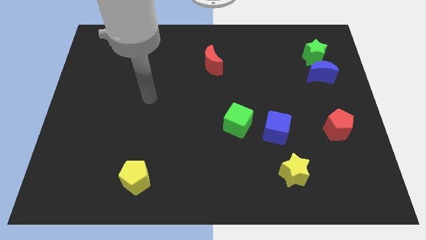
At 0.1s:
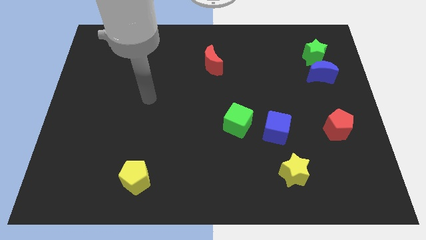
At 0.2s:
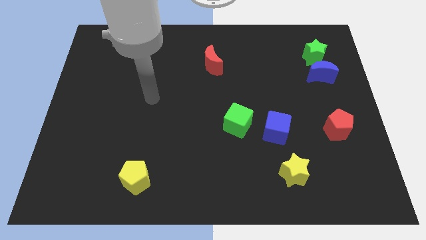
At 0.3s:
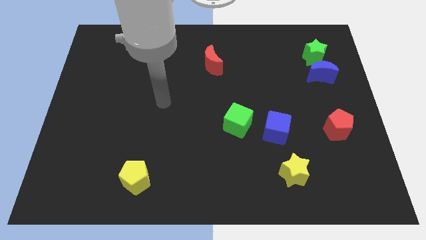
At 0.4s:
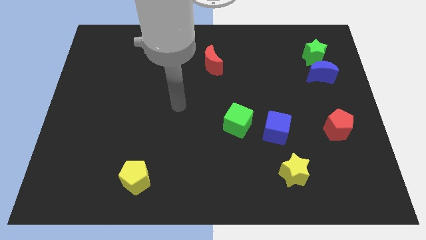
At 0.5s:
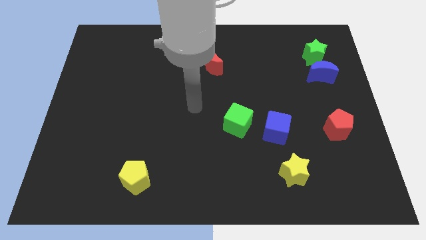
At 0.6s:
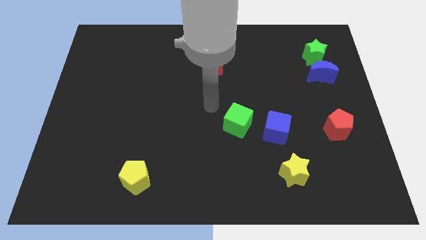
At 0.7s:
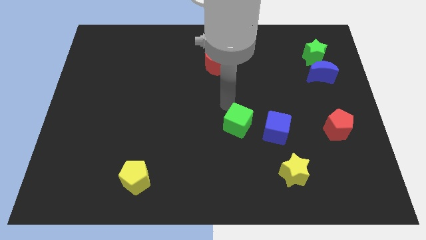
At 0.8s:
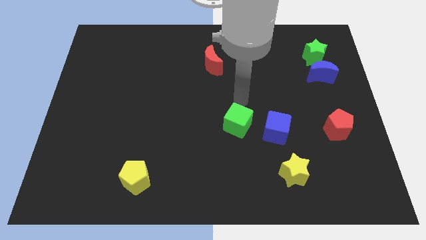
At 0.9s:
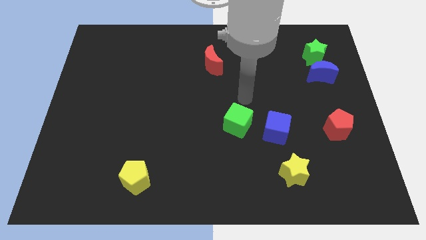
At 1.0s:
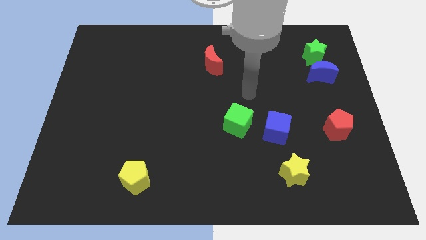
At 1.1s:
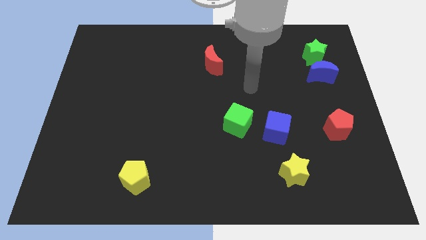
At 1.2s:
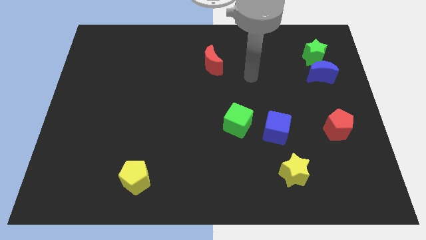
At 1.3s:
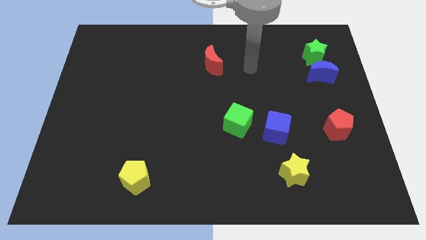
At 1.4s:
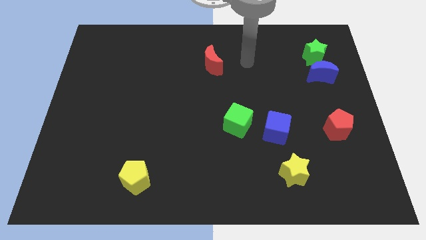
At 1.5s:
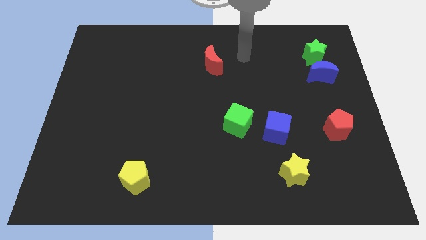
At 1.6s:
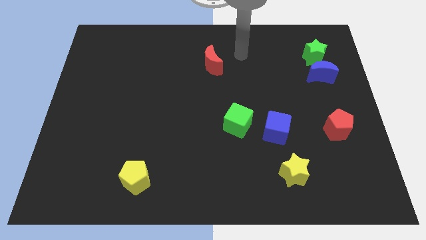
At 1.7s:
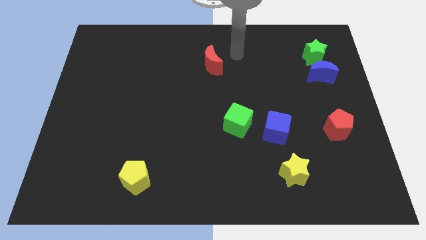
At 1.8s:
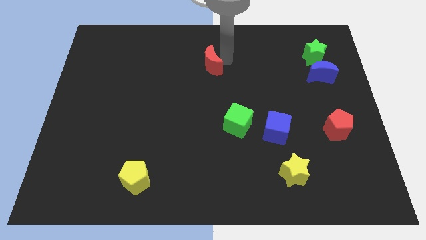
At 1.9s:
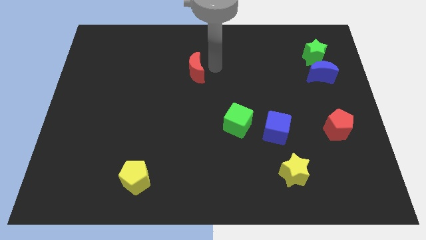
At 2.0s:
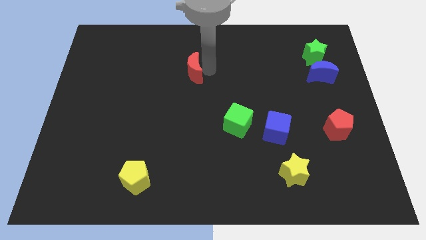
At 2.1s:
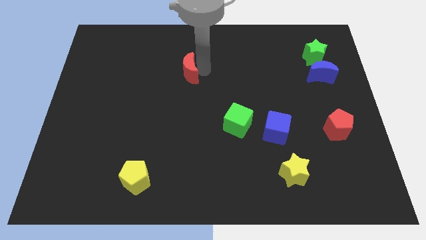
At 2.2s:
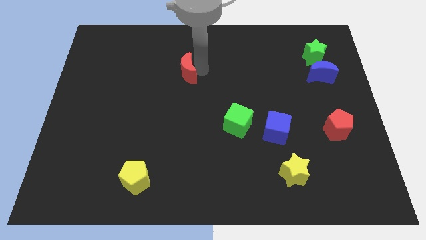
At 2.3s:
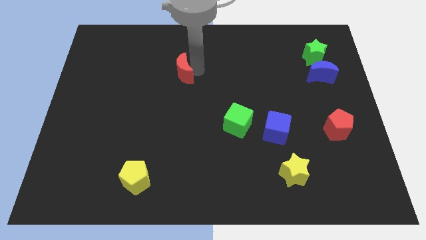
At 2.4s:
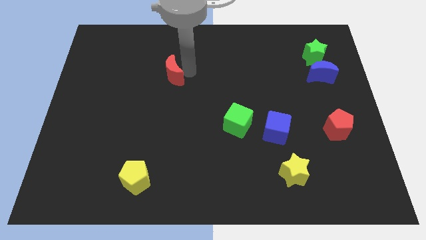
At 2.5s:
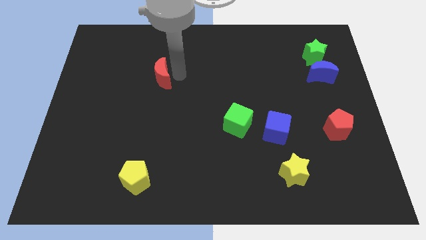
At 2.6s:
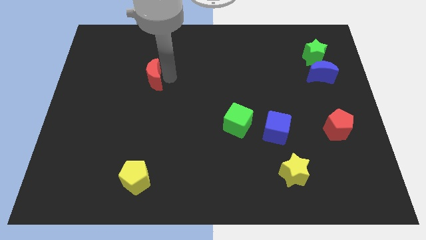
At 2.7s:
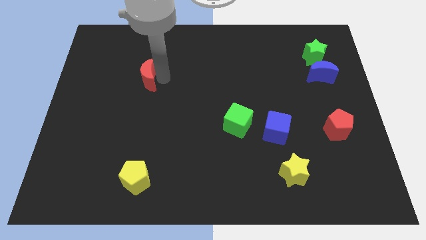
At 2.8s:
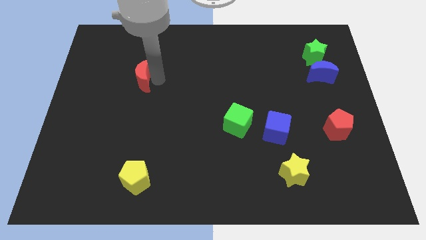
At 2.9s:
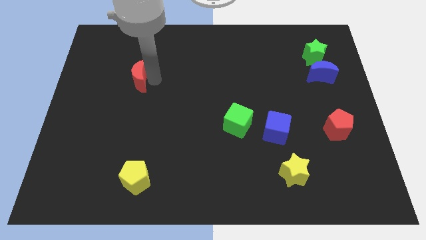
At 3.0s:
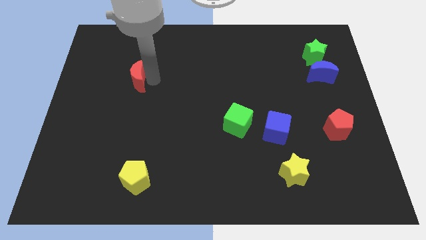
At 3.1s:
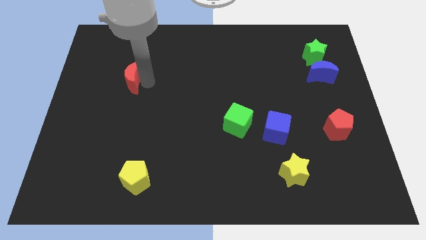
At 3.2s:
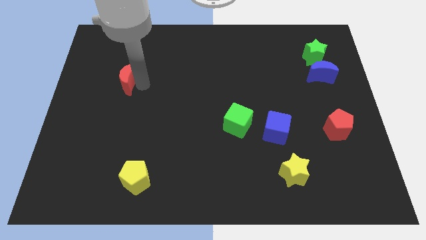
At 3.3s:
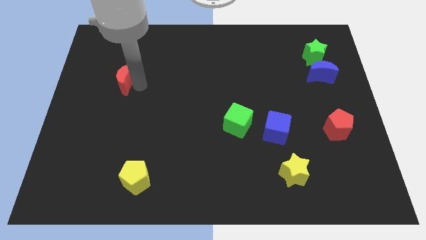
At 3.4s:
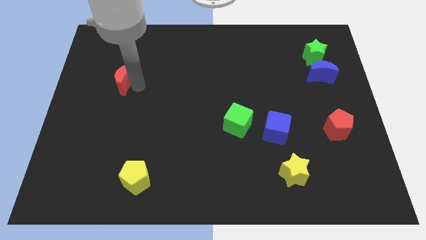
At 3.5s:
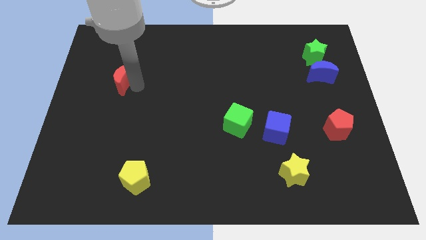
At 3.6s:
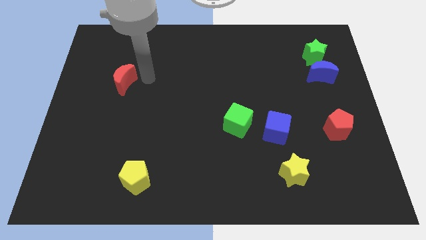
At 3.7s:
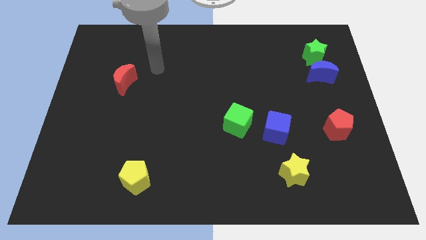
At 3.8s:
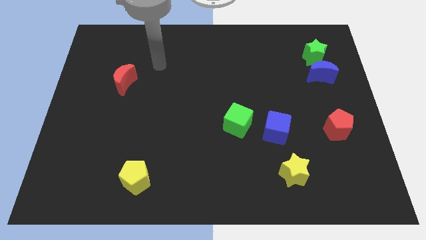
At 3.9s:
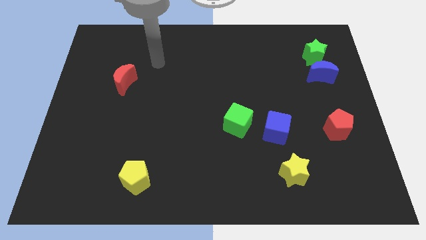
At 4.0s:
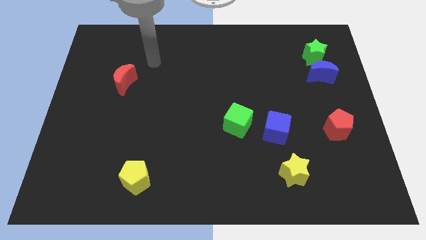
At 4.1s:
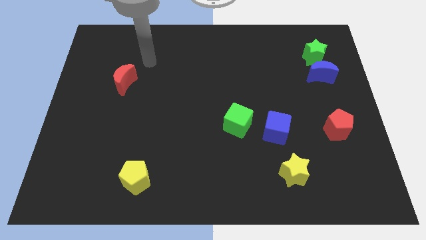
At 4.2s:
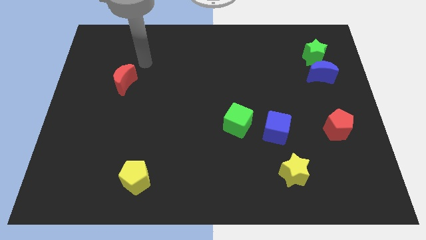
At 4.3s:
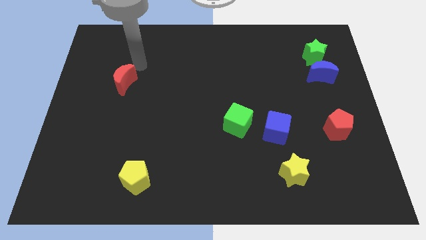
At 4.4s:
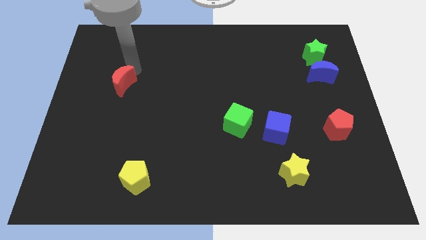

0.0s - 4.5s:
push the red crescent to the left of the board

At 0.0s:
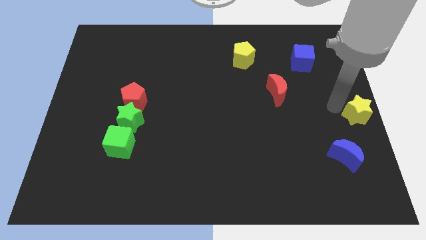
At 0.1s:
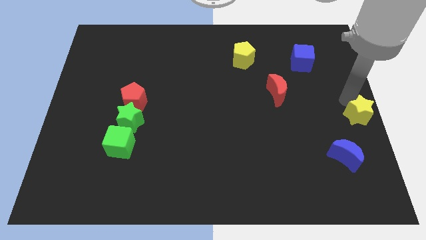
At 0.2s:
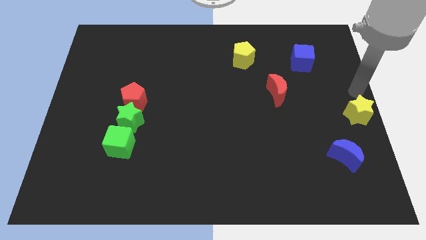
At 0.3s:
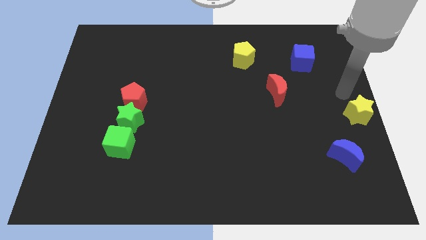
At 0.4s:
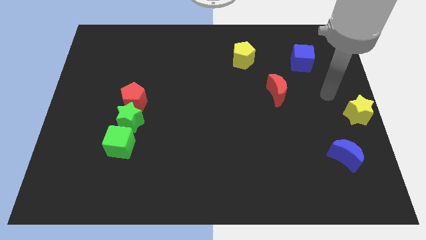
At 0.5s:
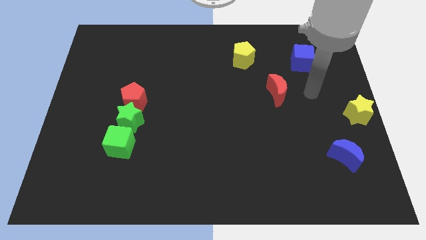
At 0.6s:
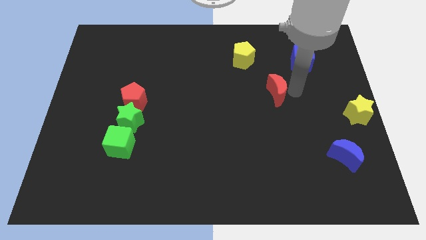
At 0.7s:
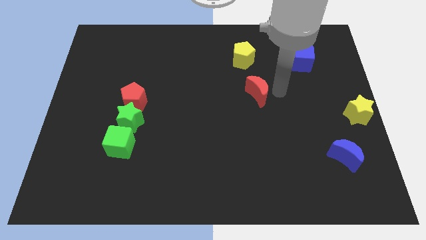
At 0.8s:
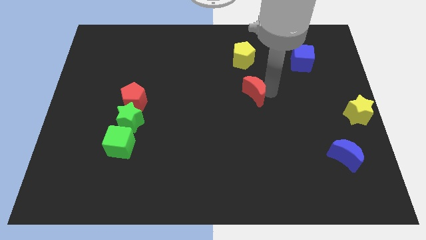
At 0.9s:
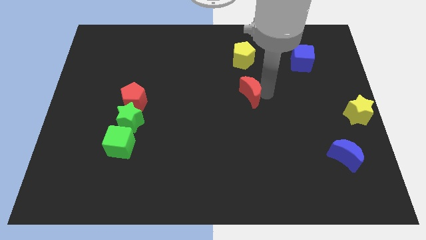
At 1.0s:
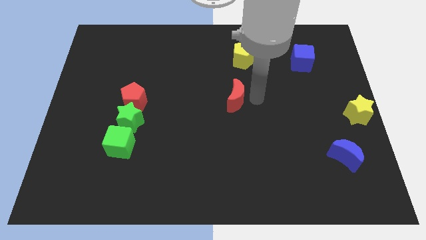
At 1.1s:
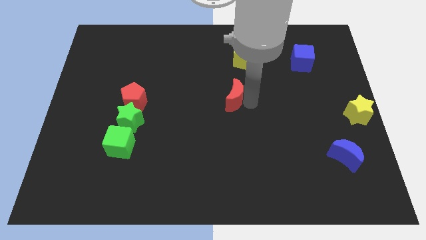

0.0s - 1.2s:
place the red crescent vertically to the bottom of the yellow pentagon

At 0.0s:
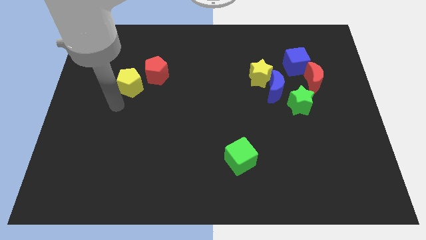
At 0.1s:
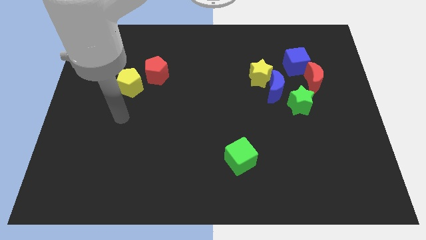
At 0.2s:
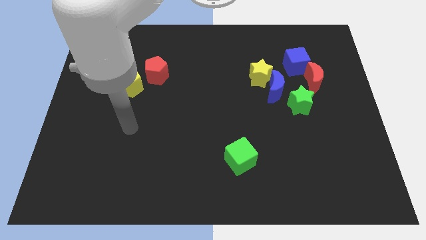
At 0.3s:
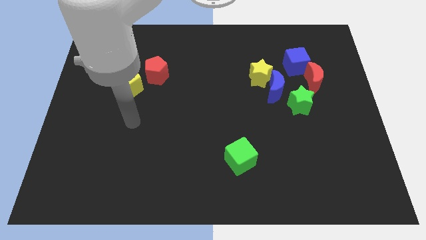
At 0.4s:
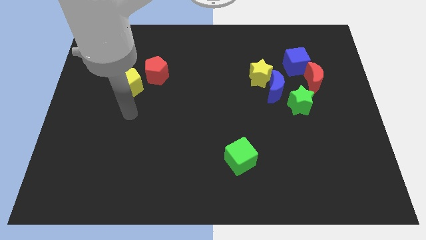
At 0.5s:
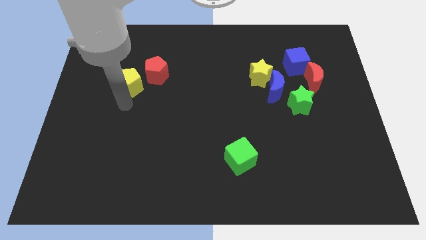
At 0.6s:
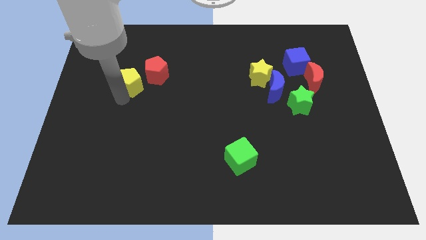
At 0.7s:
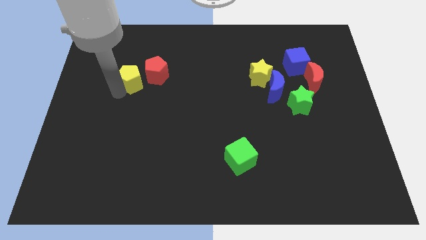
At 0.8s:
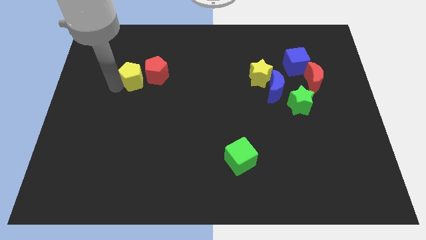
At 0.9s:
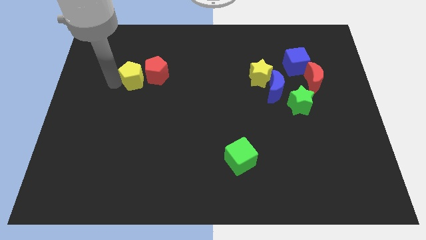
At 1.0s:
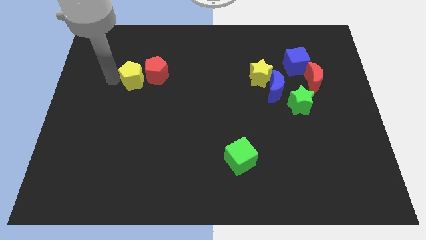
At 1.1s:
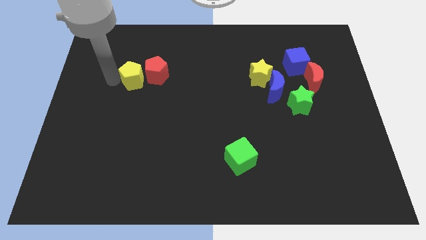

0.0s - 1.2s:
place yellow pentagon beside red pentagon

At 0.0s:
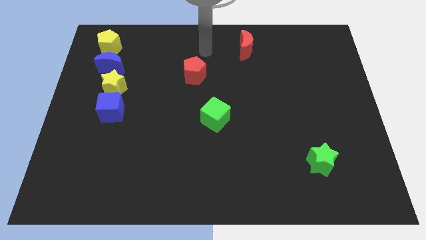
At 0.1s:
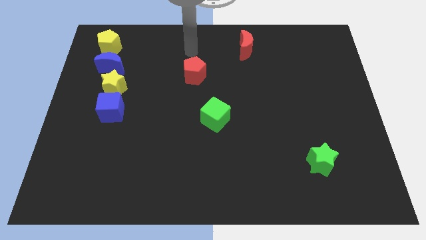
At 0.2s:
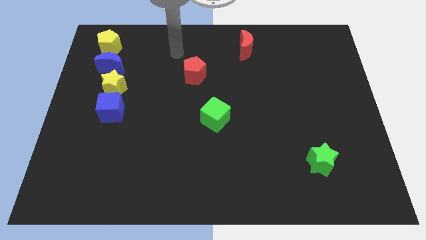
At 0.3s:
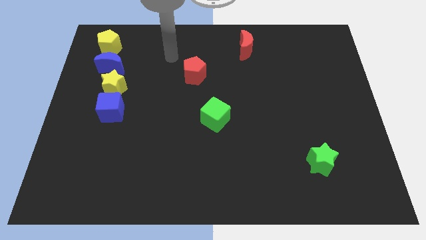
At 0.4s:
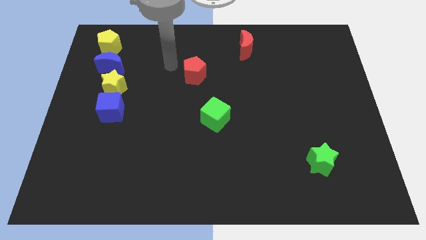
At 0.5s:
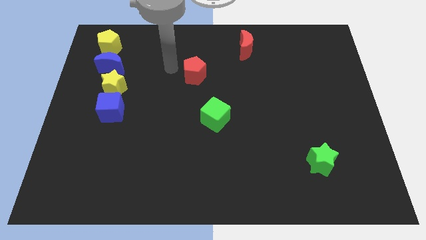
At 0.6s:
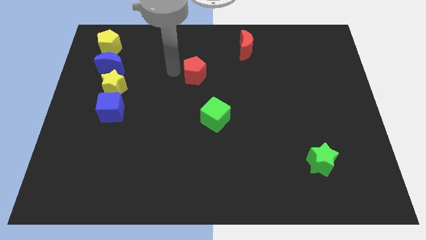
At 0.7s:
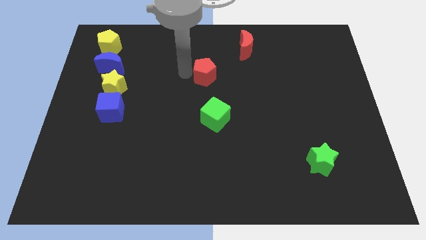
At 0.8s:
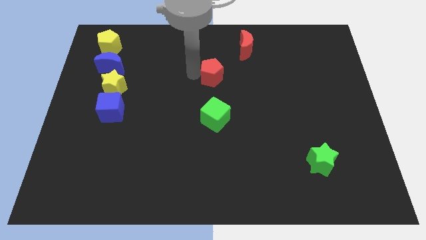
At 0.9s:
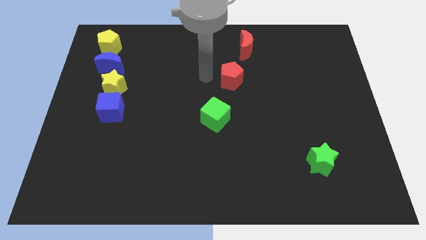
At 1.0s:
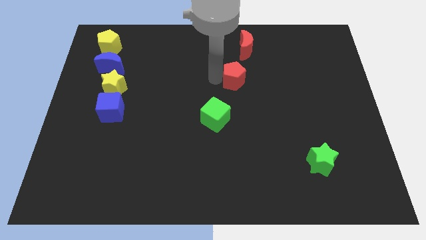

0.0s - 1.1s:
move red pentagon diagonally in between the red moon and green cube

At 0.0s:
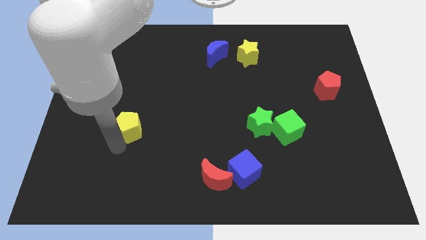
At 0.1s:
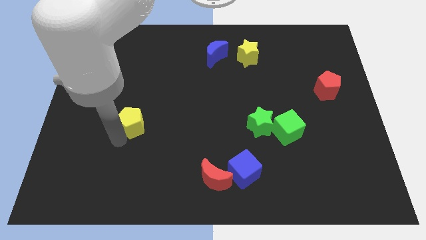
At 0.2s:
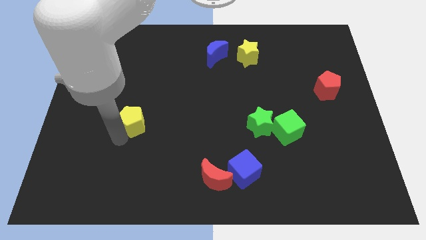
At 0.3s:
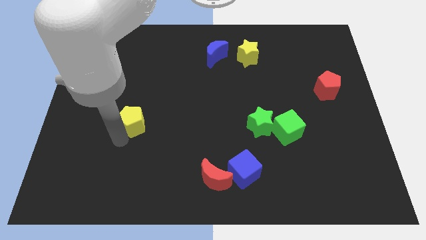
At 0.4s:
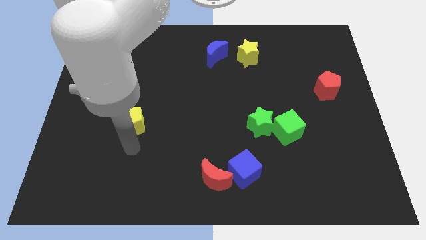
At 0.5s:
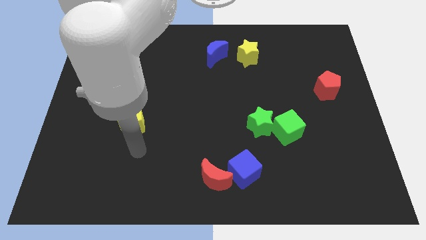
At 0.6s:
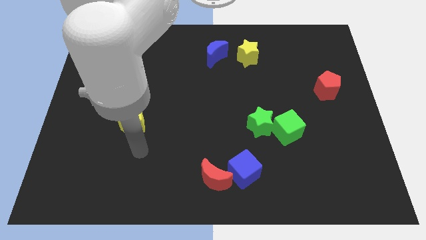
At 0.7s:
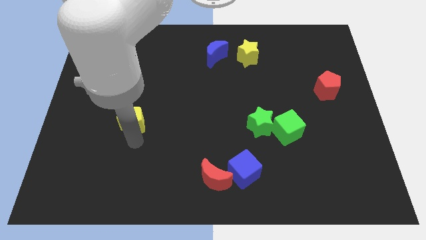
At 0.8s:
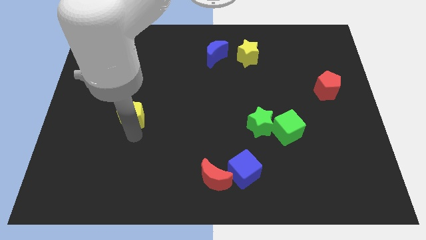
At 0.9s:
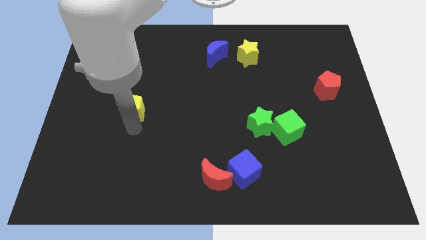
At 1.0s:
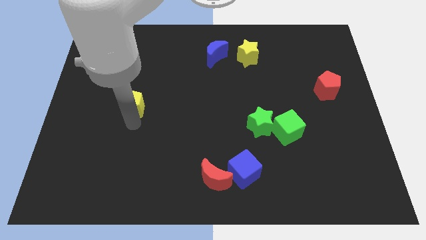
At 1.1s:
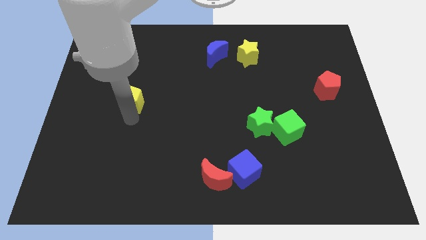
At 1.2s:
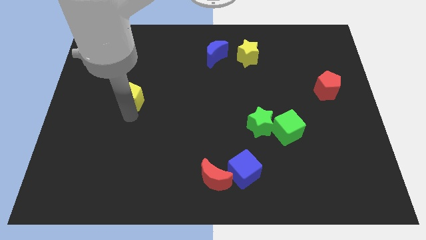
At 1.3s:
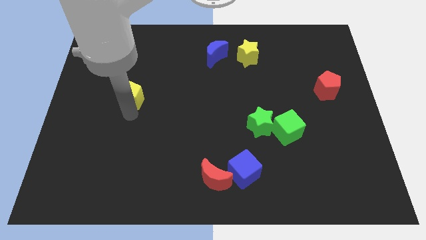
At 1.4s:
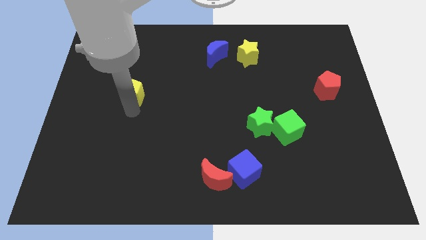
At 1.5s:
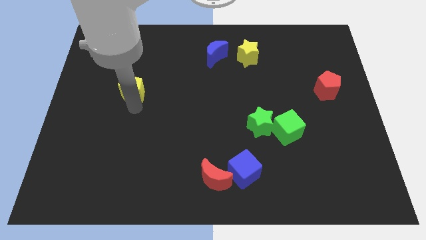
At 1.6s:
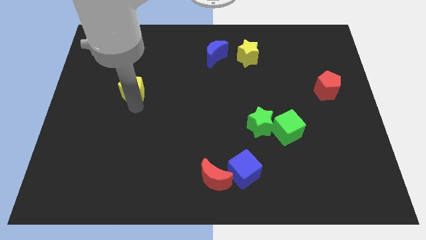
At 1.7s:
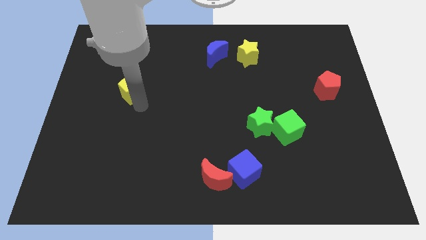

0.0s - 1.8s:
move the yellow pentagon horizontally left of the red pentagon
